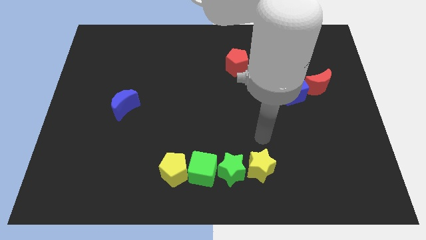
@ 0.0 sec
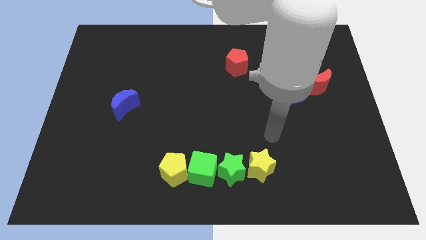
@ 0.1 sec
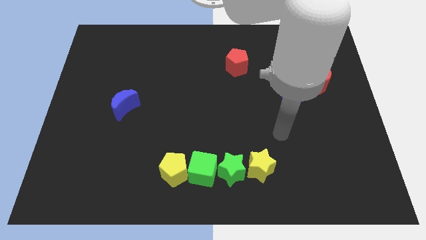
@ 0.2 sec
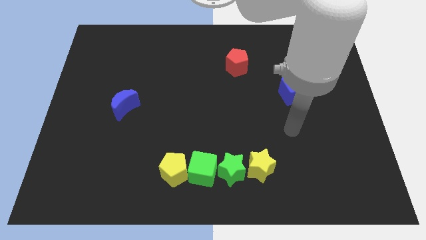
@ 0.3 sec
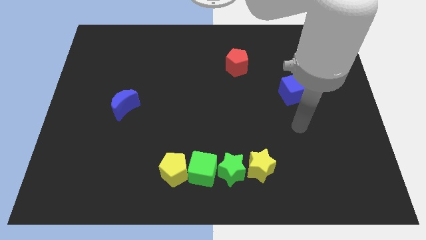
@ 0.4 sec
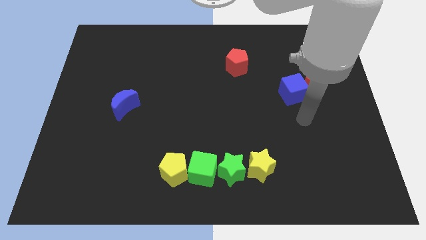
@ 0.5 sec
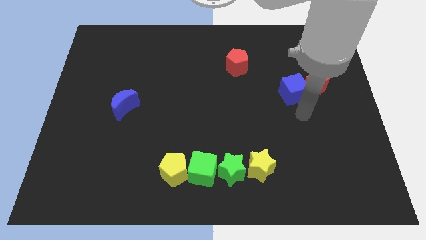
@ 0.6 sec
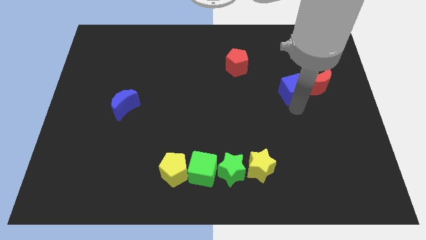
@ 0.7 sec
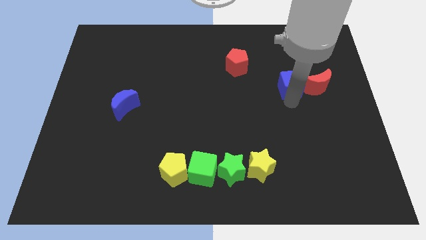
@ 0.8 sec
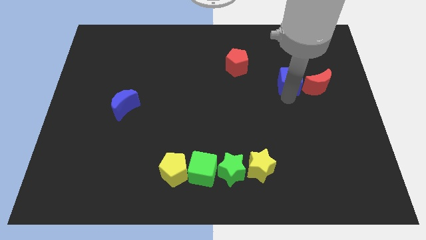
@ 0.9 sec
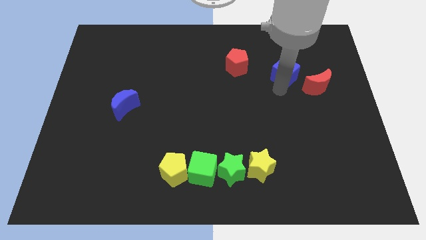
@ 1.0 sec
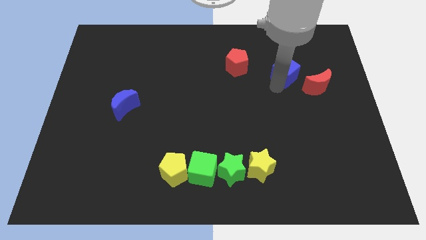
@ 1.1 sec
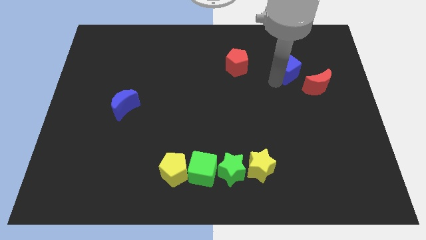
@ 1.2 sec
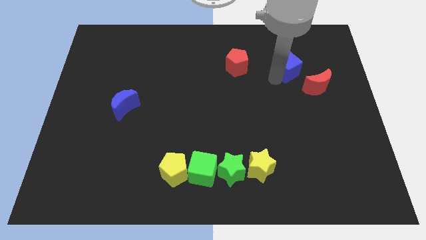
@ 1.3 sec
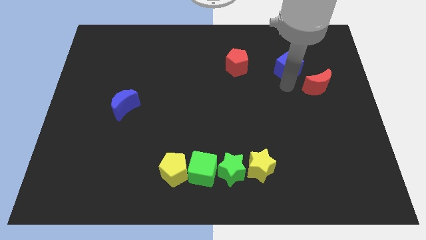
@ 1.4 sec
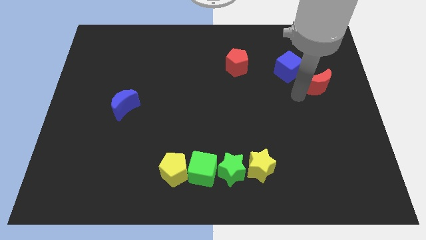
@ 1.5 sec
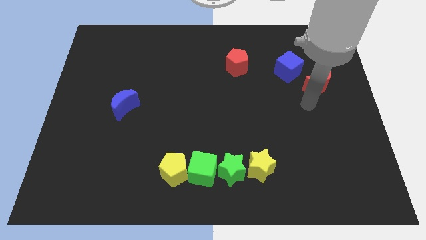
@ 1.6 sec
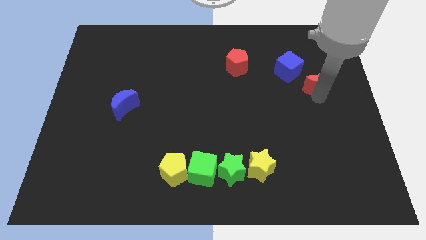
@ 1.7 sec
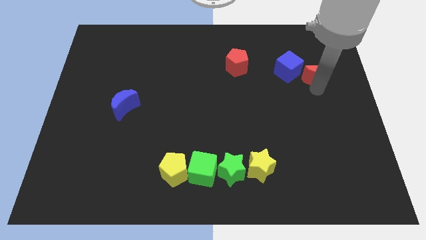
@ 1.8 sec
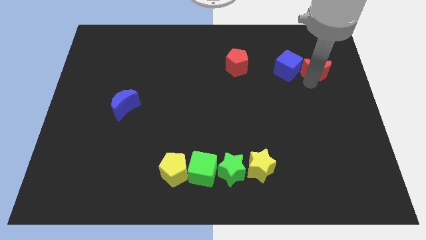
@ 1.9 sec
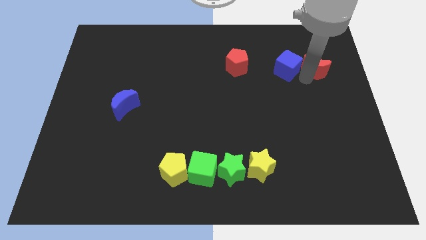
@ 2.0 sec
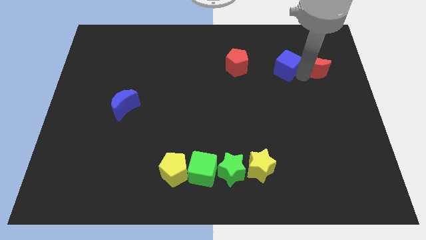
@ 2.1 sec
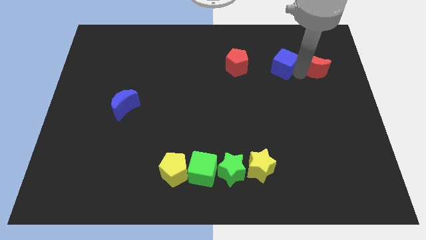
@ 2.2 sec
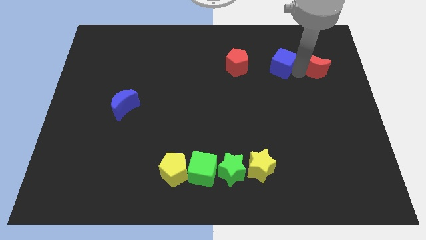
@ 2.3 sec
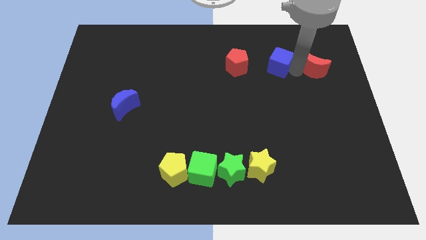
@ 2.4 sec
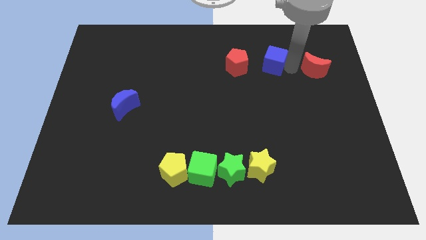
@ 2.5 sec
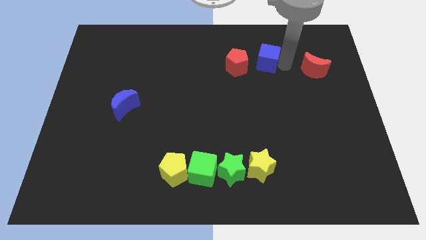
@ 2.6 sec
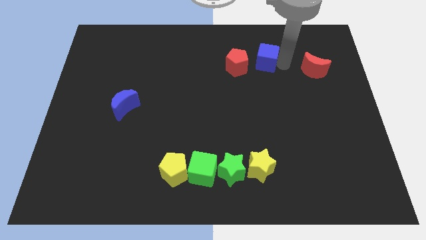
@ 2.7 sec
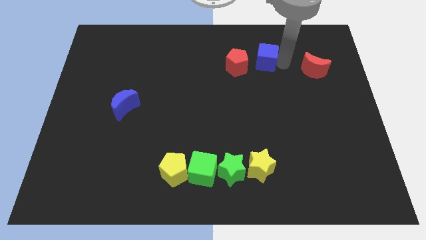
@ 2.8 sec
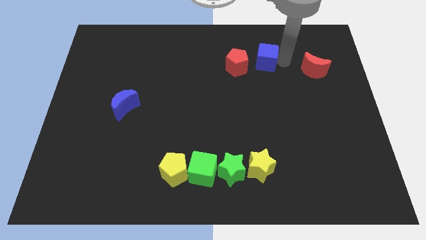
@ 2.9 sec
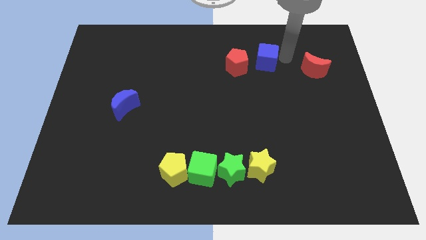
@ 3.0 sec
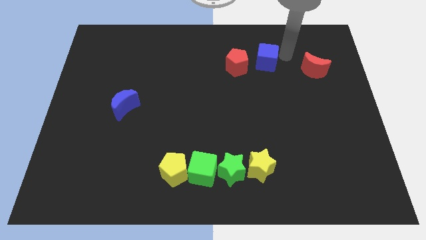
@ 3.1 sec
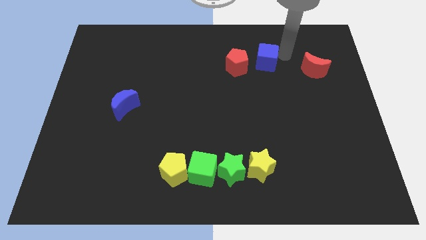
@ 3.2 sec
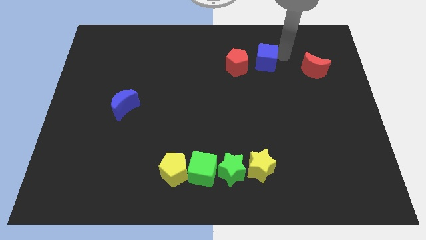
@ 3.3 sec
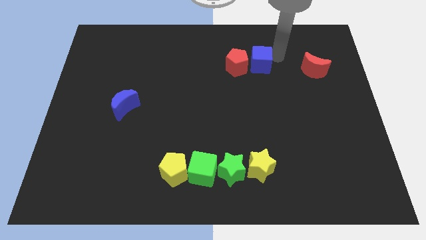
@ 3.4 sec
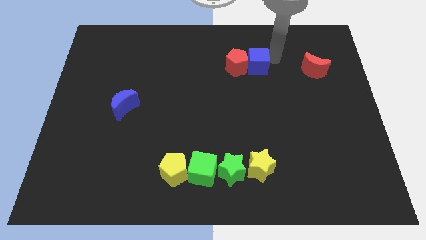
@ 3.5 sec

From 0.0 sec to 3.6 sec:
push the blue cube upward

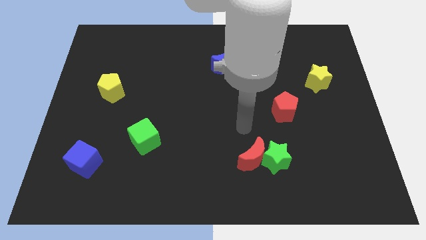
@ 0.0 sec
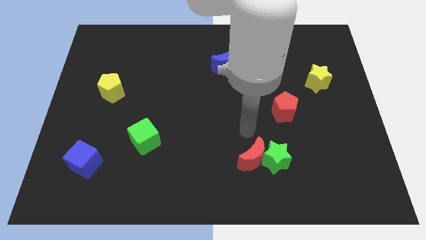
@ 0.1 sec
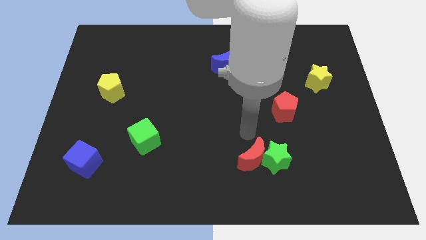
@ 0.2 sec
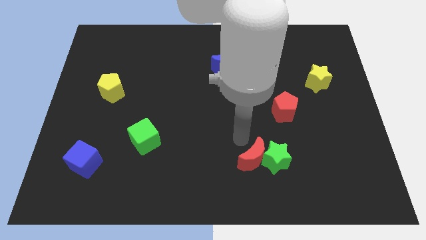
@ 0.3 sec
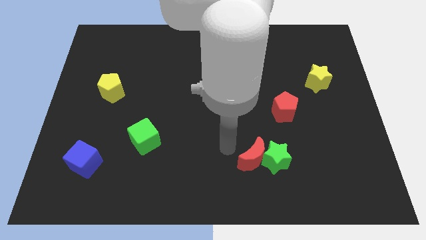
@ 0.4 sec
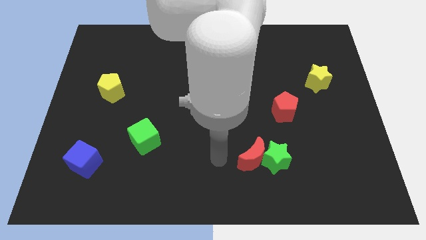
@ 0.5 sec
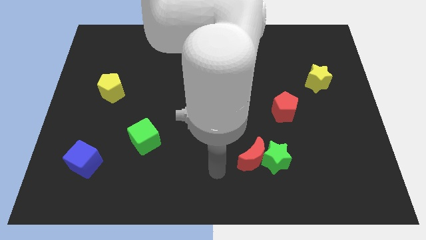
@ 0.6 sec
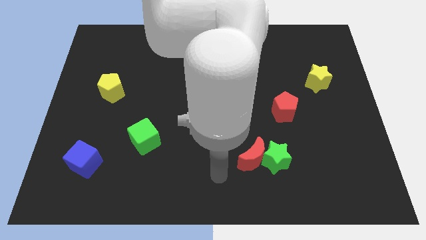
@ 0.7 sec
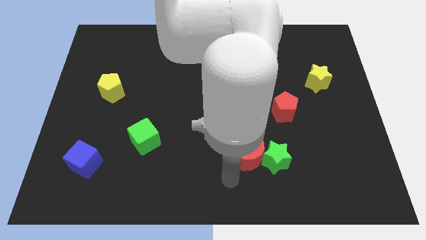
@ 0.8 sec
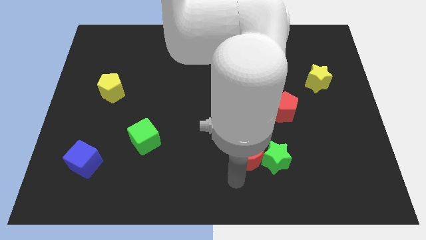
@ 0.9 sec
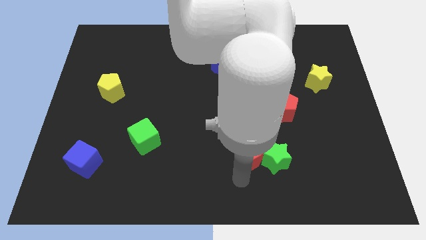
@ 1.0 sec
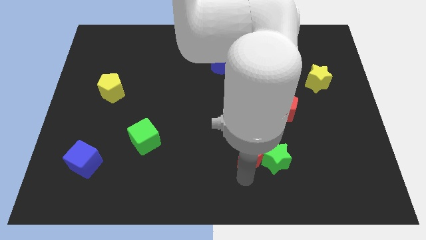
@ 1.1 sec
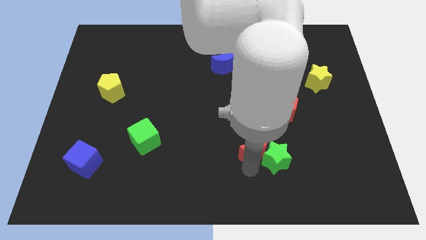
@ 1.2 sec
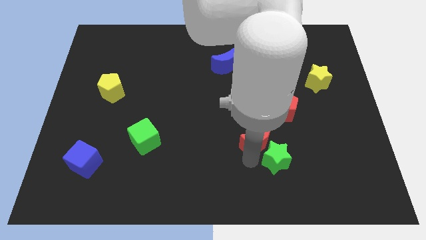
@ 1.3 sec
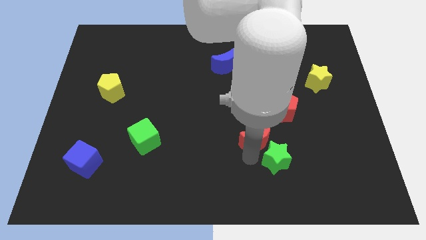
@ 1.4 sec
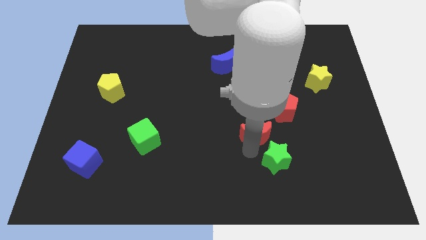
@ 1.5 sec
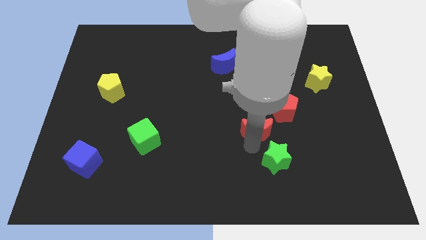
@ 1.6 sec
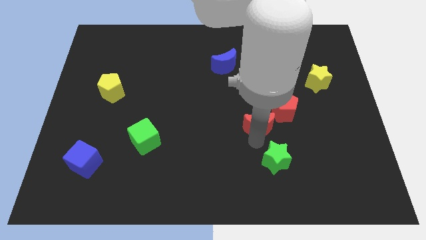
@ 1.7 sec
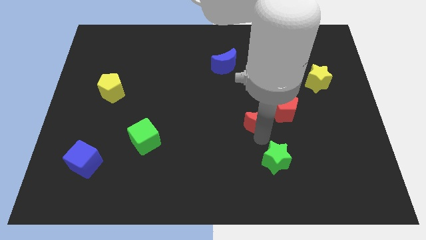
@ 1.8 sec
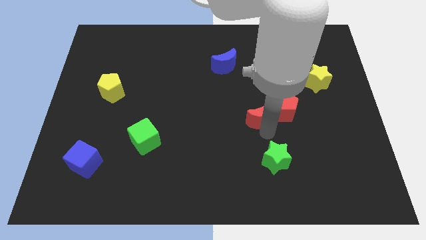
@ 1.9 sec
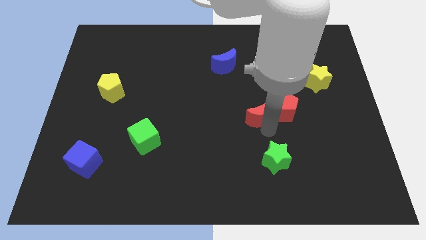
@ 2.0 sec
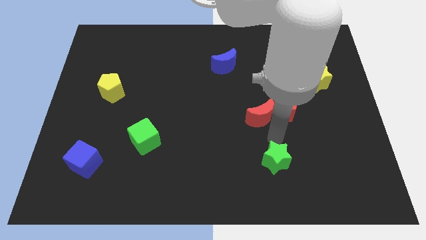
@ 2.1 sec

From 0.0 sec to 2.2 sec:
move the red crescent to the left side of the red pentagon

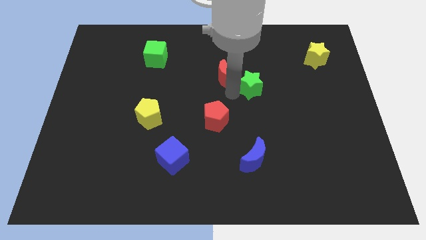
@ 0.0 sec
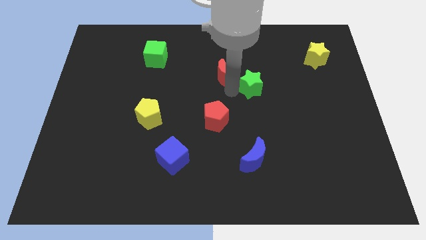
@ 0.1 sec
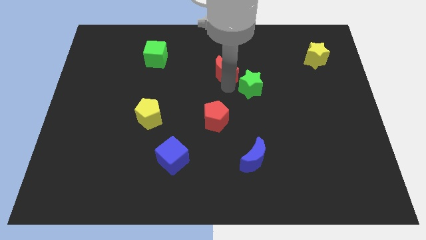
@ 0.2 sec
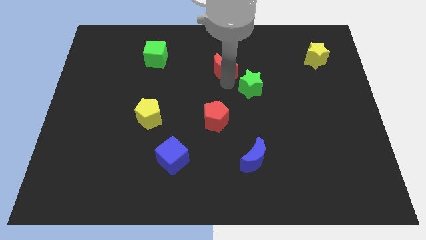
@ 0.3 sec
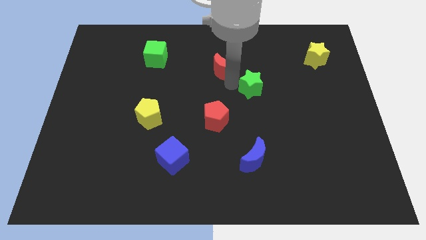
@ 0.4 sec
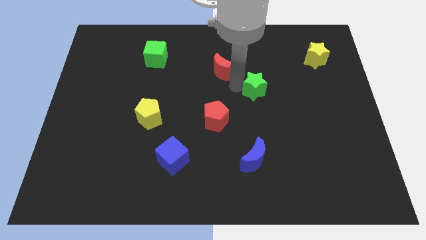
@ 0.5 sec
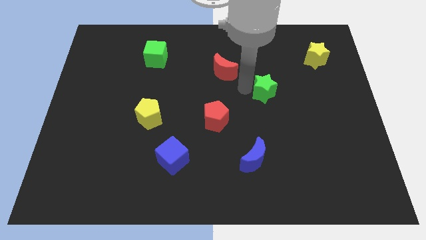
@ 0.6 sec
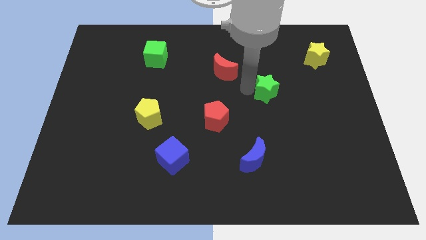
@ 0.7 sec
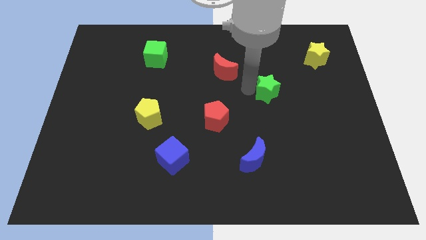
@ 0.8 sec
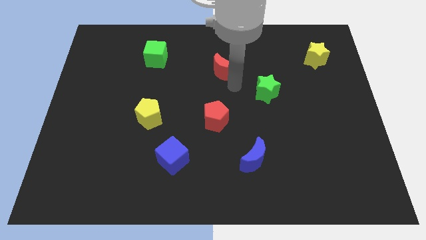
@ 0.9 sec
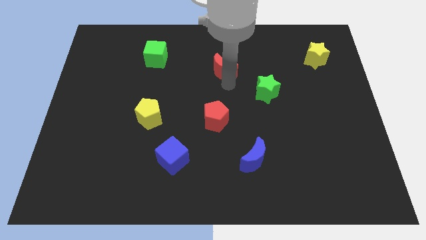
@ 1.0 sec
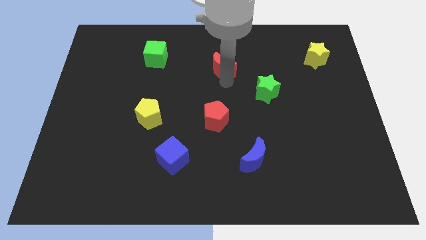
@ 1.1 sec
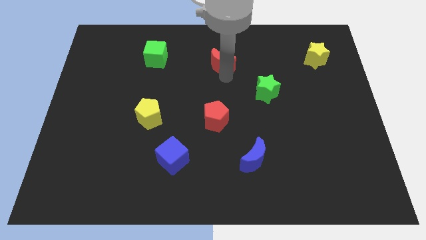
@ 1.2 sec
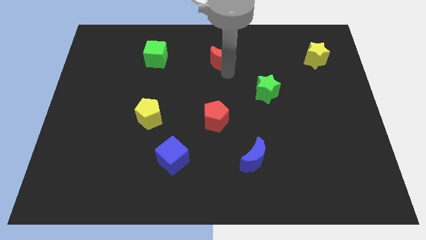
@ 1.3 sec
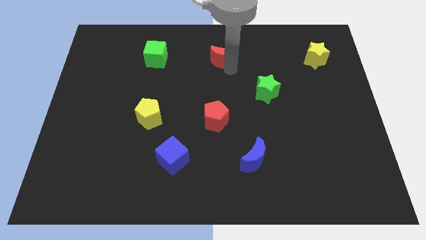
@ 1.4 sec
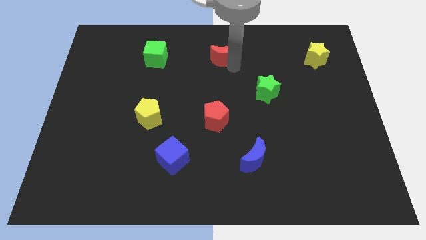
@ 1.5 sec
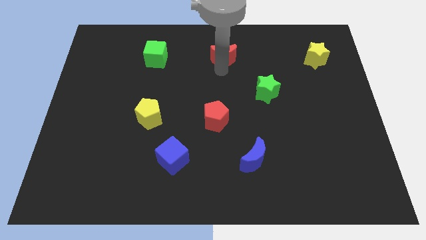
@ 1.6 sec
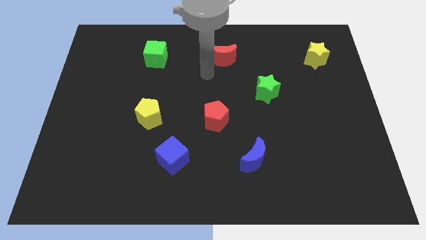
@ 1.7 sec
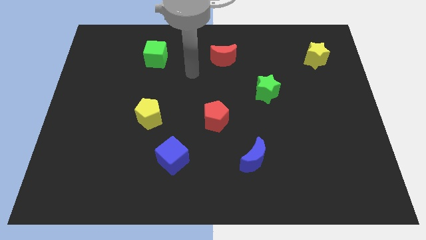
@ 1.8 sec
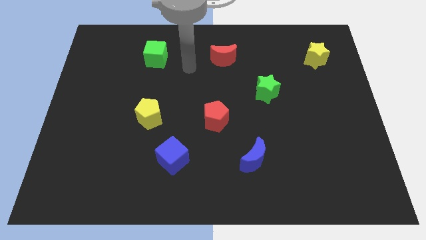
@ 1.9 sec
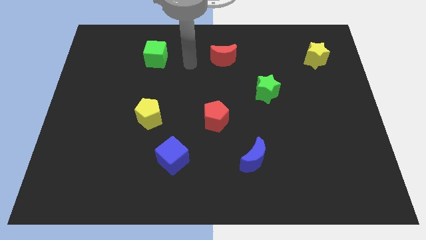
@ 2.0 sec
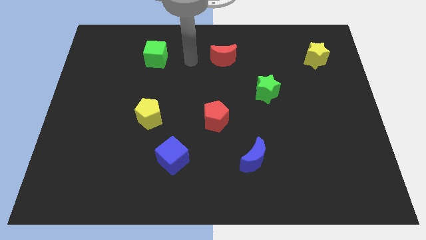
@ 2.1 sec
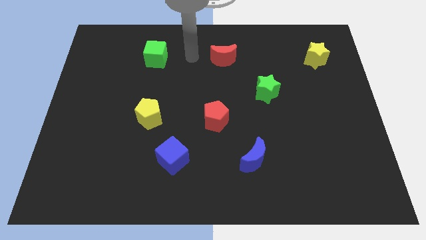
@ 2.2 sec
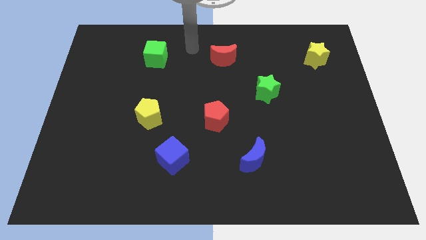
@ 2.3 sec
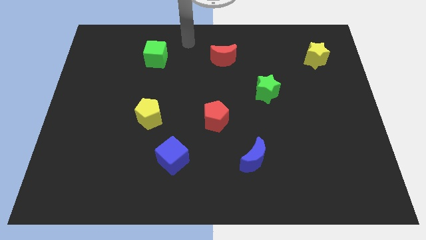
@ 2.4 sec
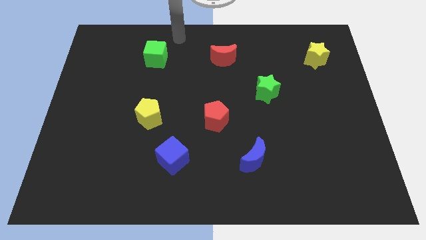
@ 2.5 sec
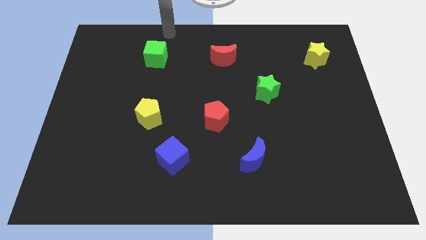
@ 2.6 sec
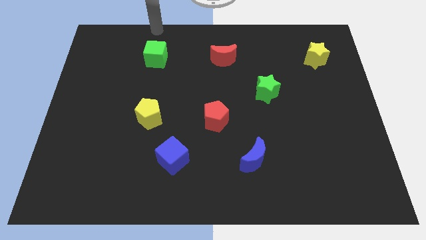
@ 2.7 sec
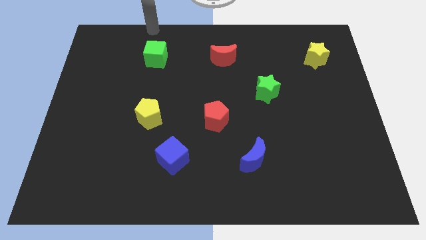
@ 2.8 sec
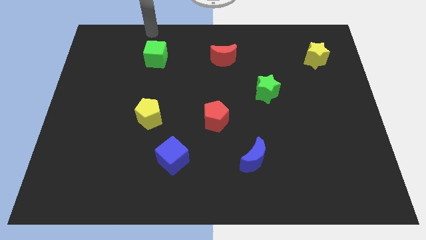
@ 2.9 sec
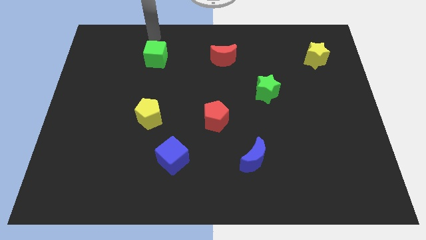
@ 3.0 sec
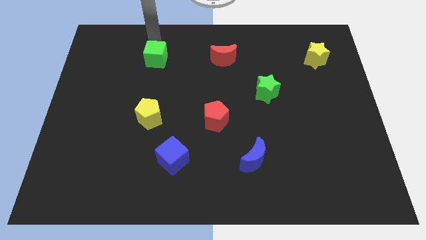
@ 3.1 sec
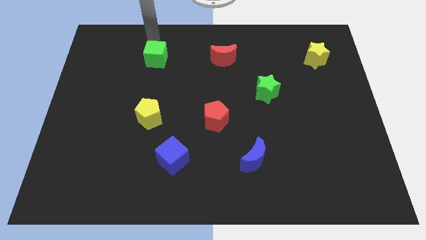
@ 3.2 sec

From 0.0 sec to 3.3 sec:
separate green star and the red crescent
